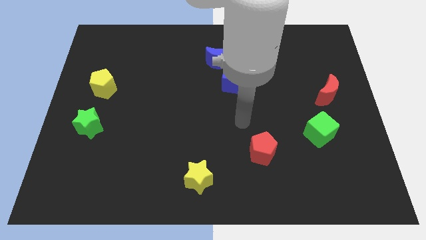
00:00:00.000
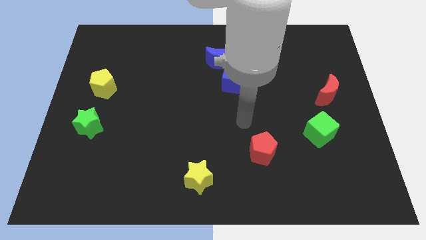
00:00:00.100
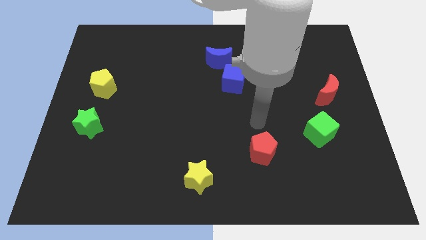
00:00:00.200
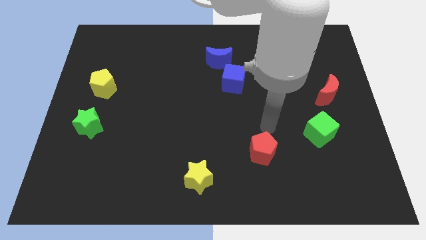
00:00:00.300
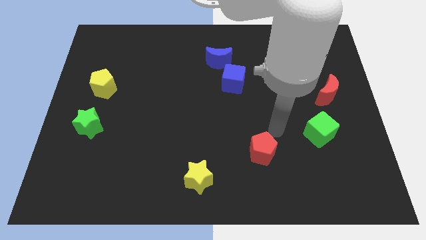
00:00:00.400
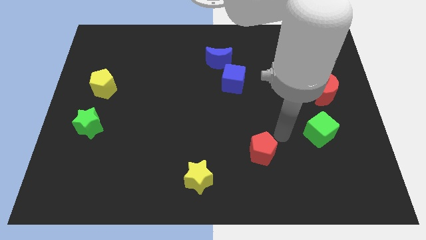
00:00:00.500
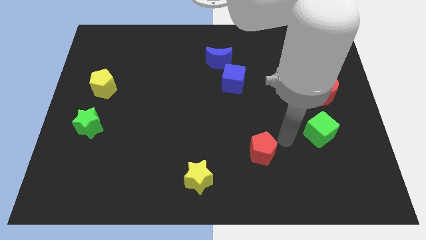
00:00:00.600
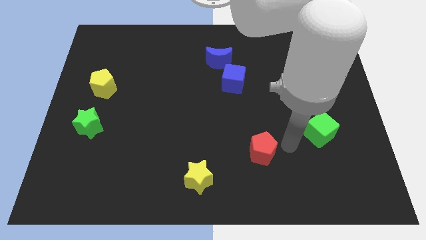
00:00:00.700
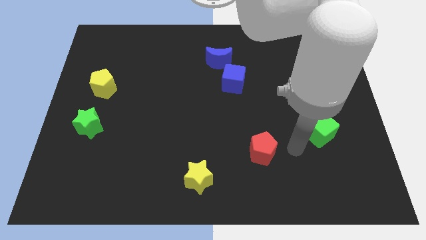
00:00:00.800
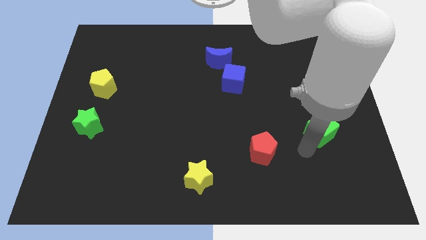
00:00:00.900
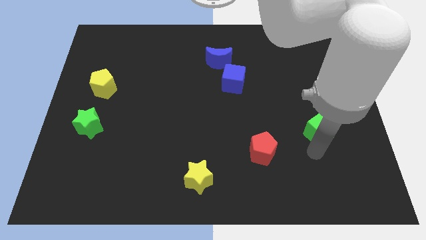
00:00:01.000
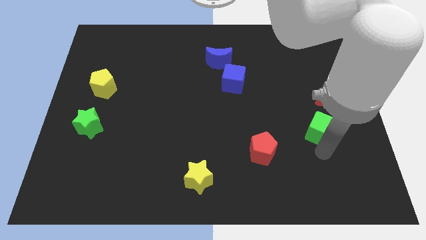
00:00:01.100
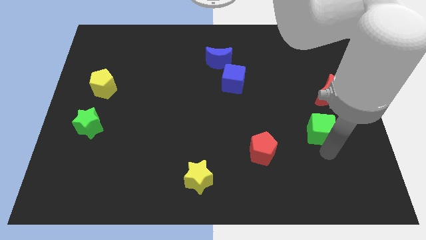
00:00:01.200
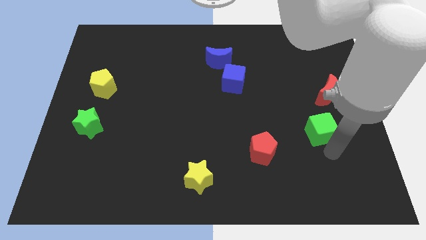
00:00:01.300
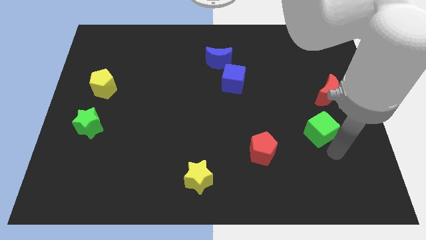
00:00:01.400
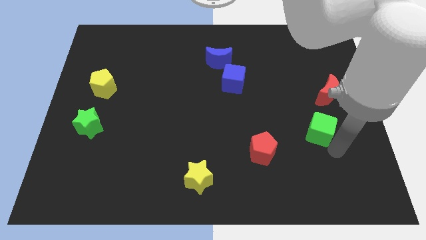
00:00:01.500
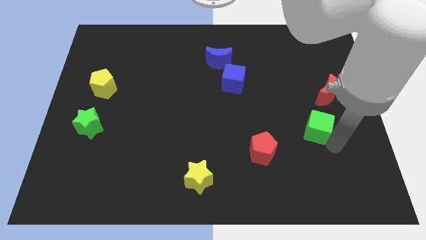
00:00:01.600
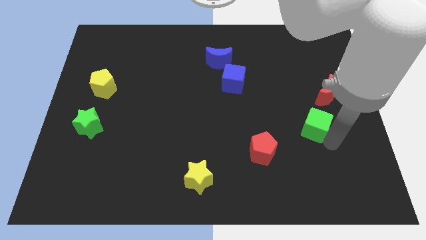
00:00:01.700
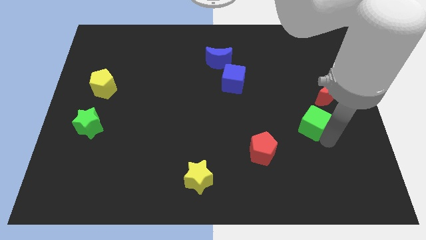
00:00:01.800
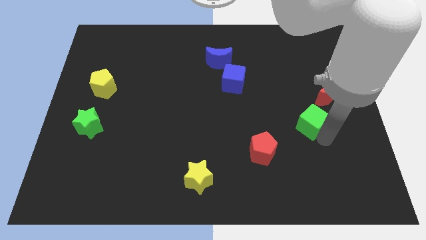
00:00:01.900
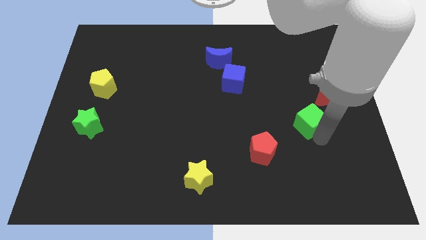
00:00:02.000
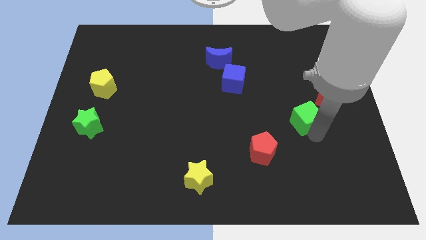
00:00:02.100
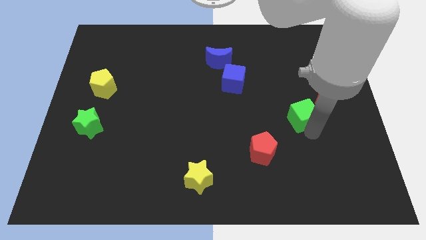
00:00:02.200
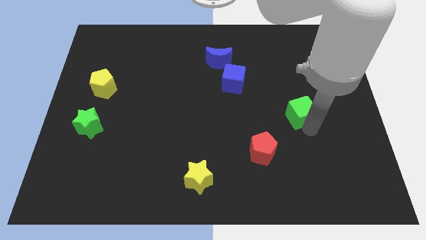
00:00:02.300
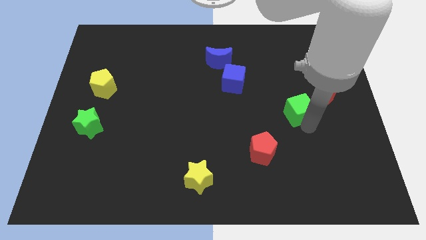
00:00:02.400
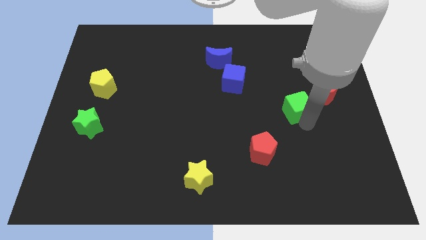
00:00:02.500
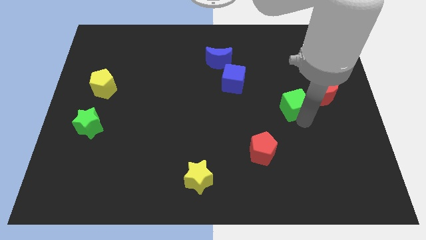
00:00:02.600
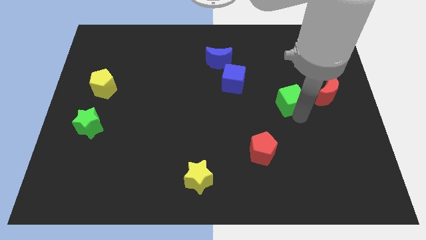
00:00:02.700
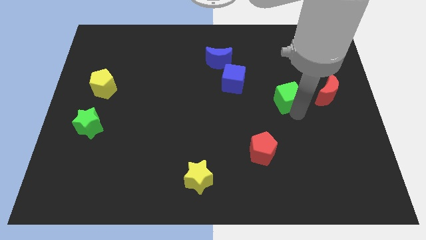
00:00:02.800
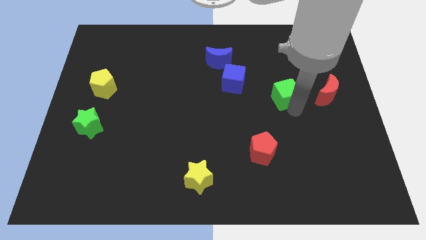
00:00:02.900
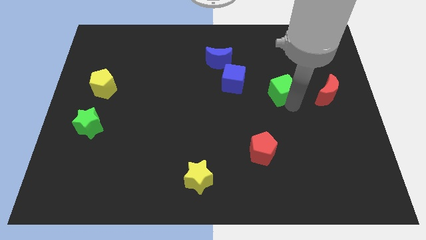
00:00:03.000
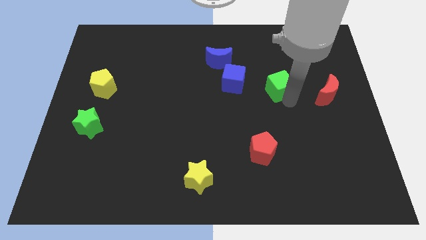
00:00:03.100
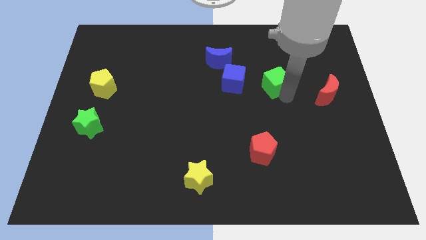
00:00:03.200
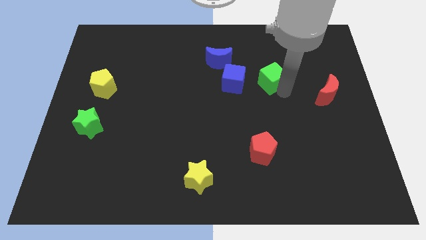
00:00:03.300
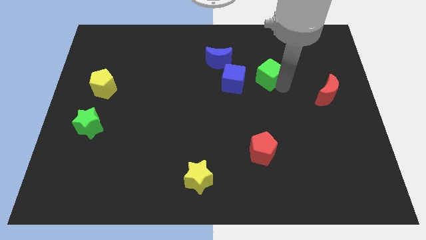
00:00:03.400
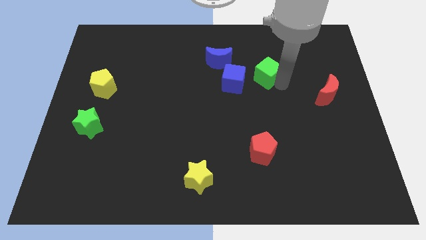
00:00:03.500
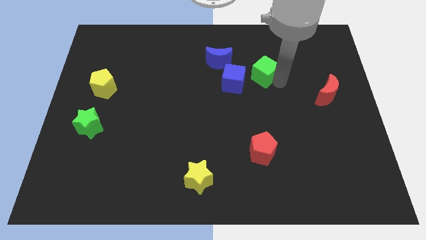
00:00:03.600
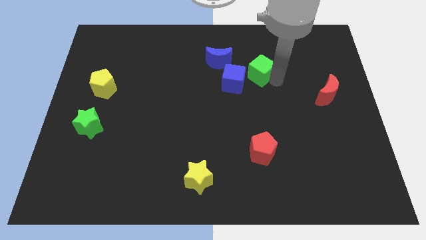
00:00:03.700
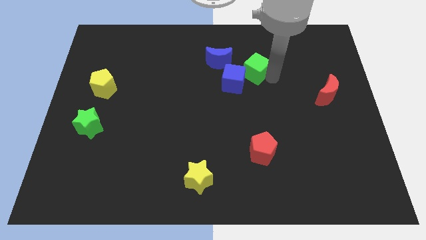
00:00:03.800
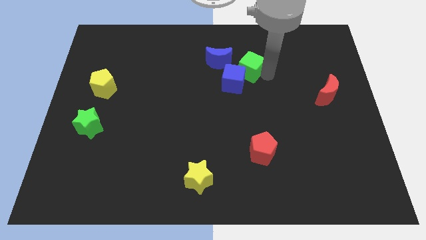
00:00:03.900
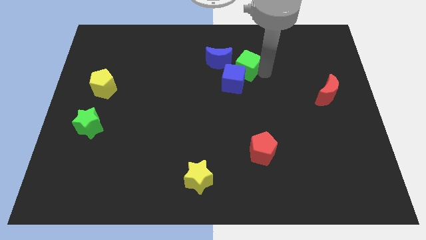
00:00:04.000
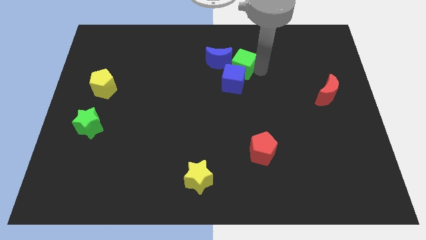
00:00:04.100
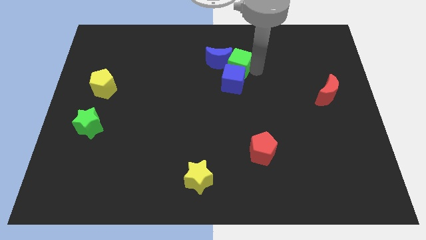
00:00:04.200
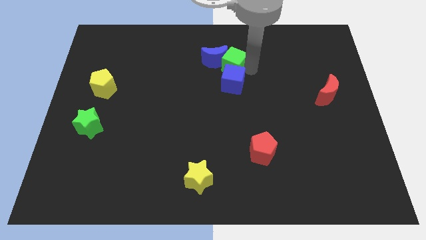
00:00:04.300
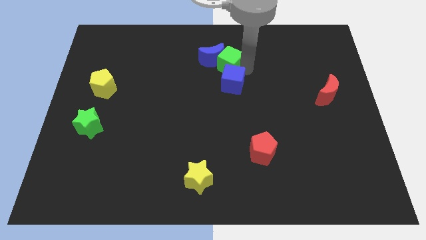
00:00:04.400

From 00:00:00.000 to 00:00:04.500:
move the green cube next to the blue moon

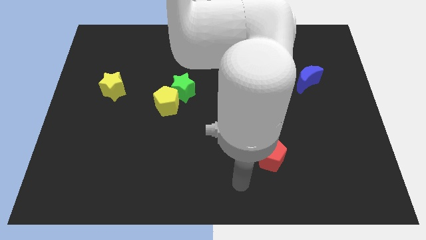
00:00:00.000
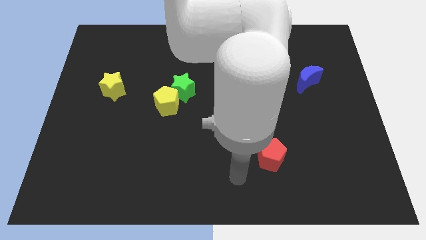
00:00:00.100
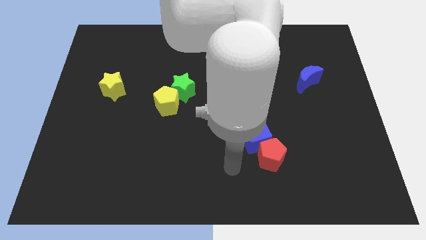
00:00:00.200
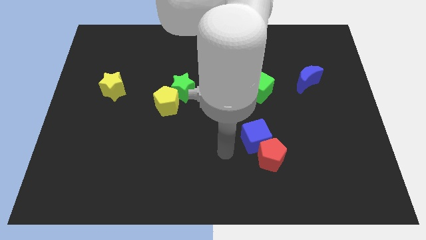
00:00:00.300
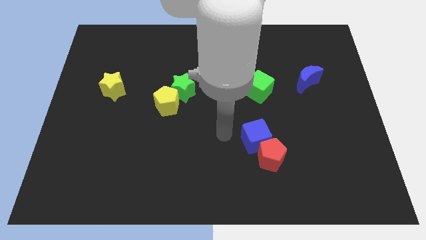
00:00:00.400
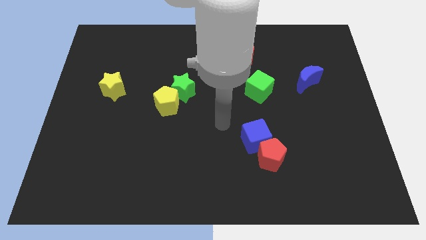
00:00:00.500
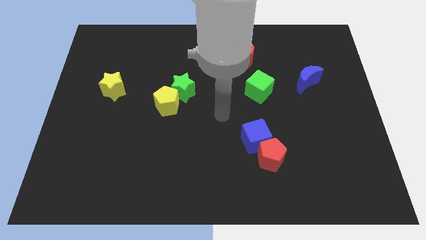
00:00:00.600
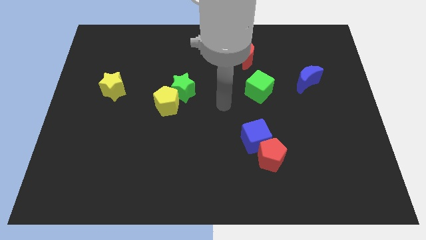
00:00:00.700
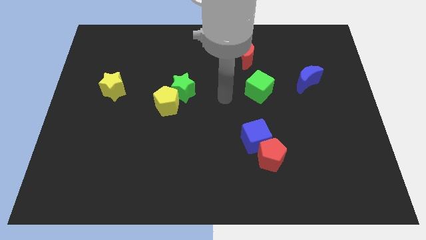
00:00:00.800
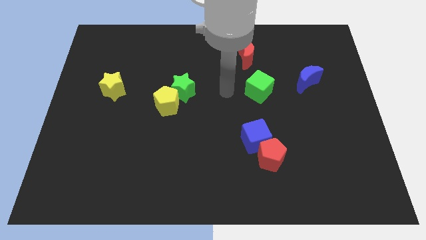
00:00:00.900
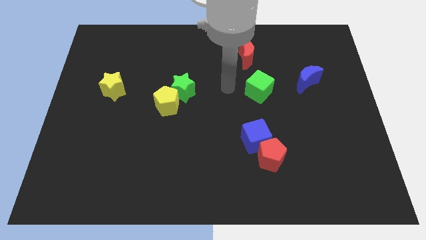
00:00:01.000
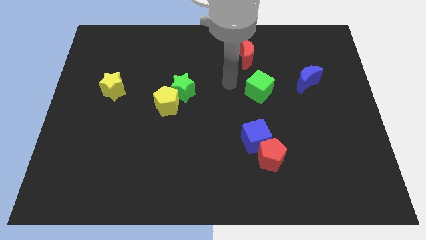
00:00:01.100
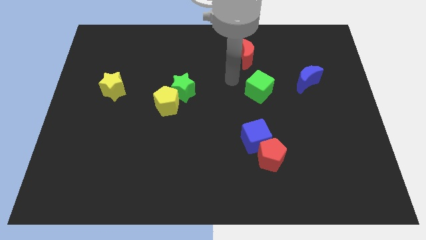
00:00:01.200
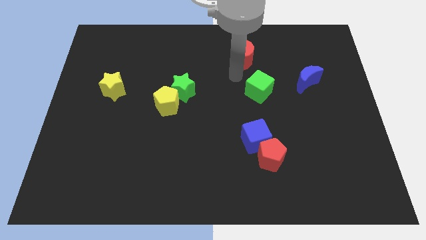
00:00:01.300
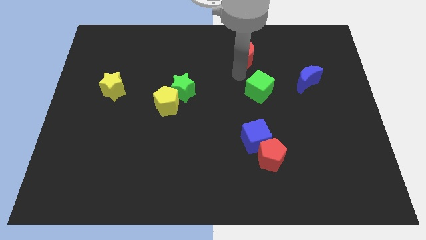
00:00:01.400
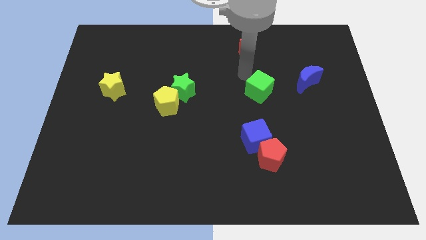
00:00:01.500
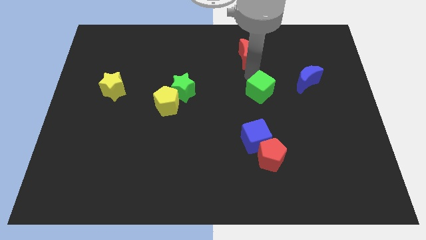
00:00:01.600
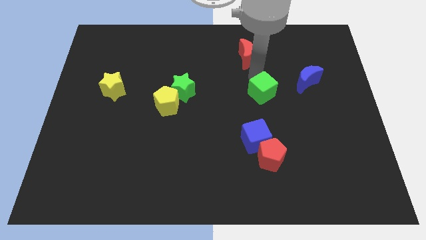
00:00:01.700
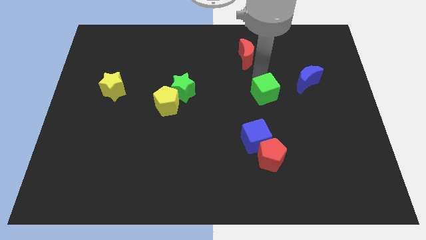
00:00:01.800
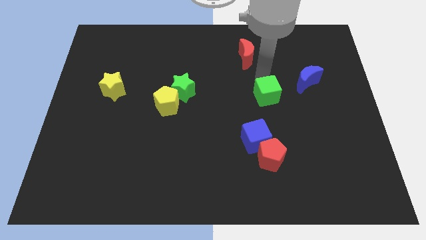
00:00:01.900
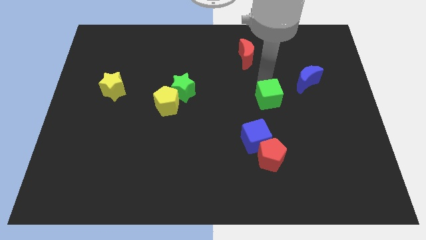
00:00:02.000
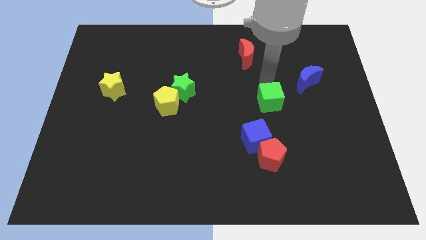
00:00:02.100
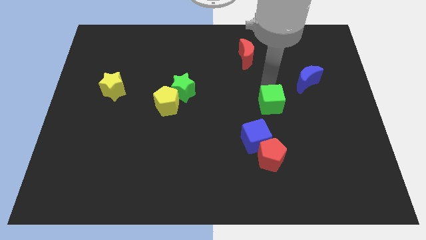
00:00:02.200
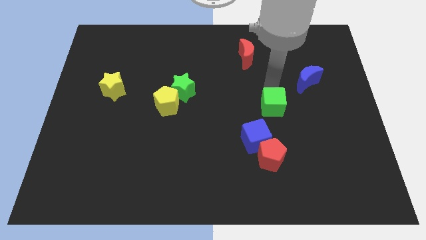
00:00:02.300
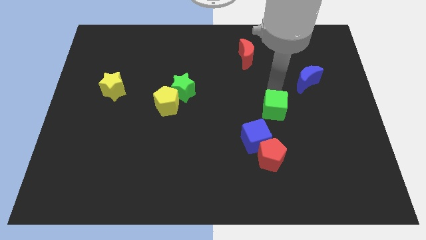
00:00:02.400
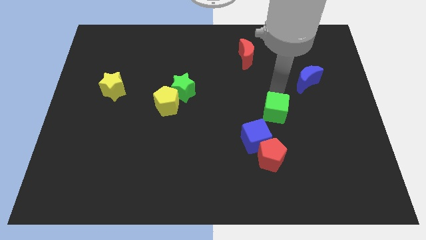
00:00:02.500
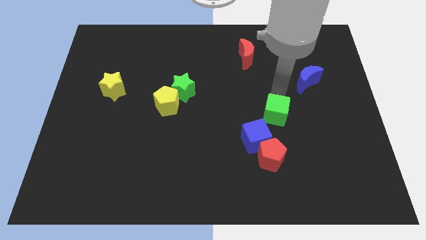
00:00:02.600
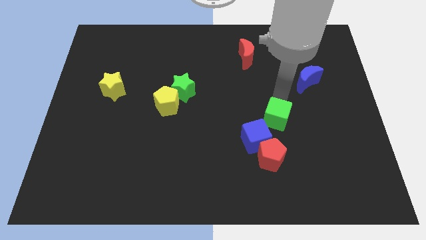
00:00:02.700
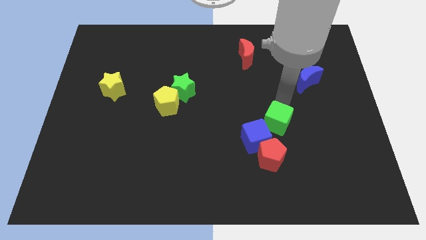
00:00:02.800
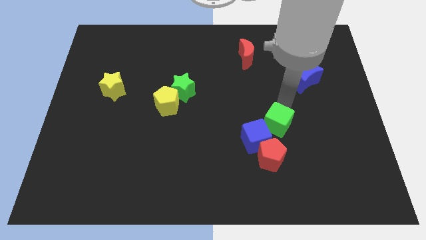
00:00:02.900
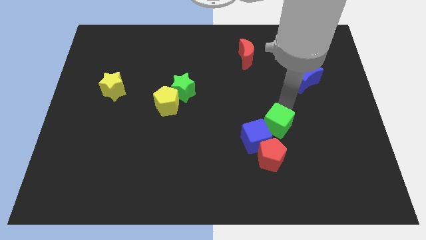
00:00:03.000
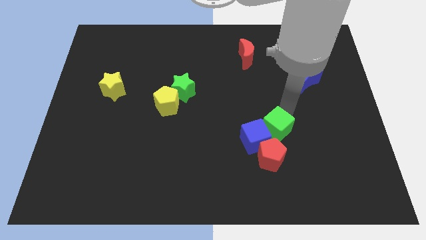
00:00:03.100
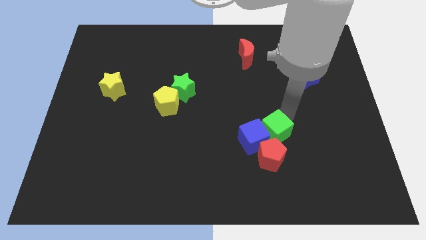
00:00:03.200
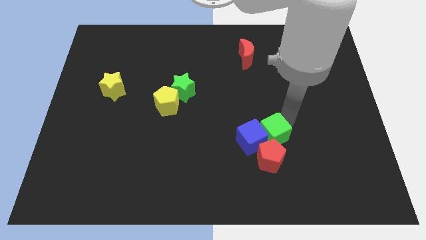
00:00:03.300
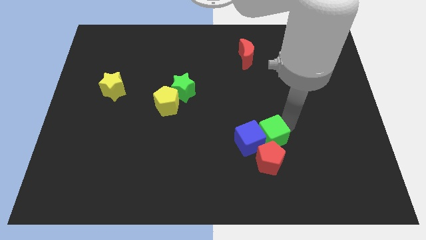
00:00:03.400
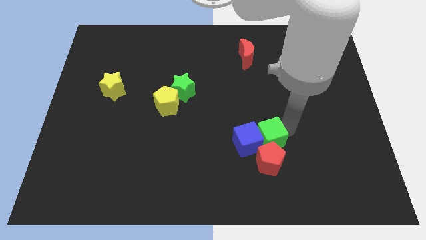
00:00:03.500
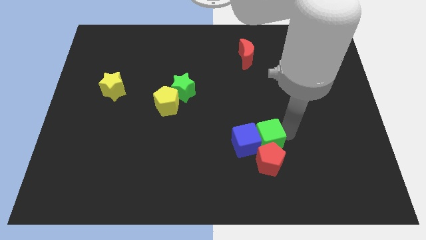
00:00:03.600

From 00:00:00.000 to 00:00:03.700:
slide the green cube towards the red pentagon
